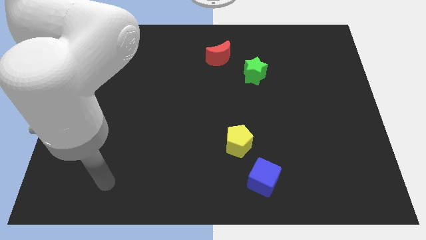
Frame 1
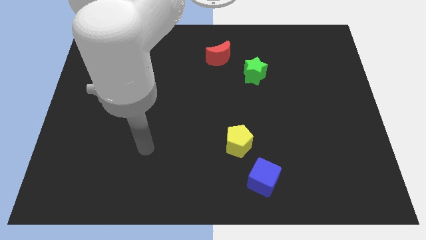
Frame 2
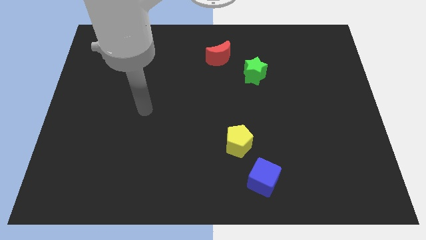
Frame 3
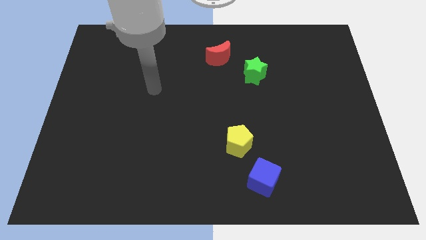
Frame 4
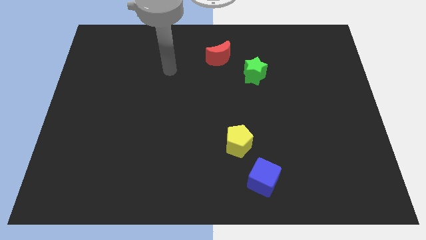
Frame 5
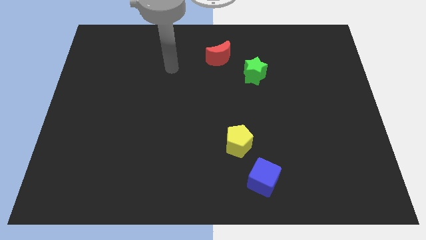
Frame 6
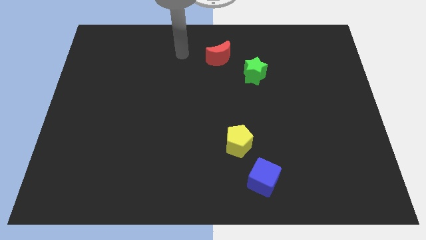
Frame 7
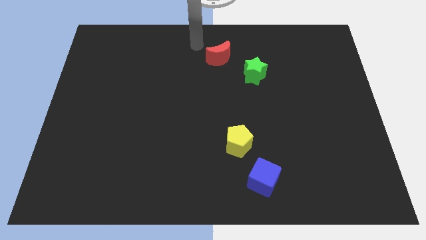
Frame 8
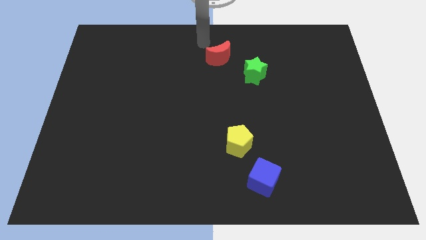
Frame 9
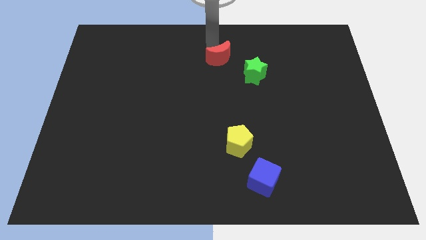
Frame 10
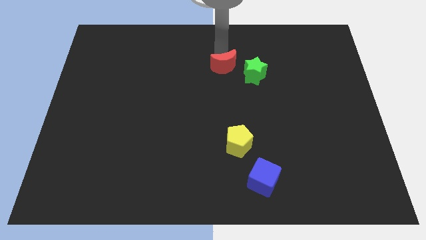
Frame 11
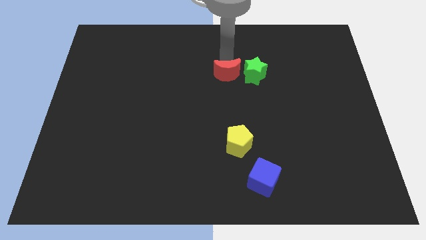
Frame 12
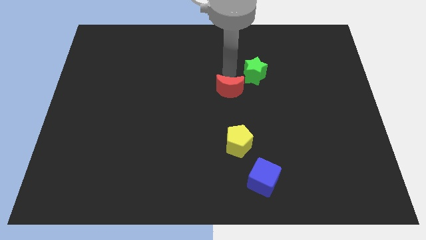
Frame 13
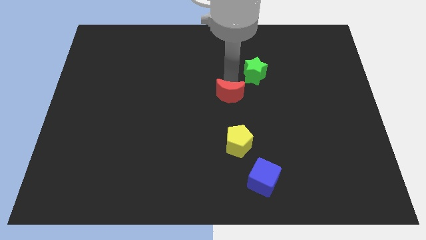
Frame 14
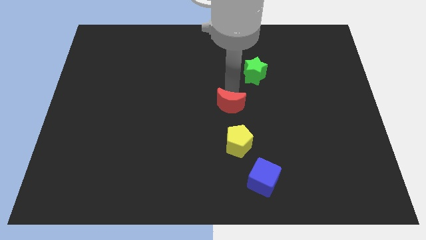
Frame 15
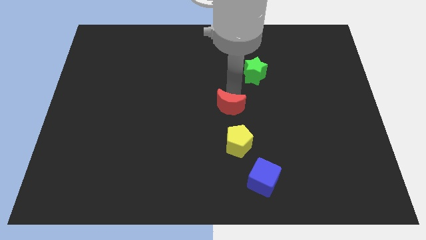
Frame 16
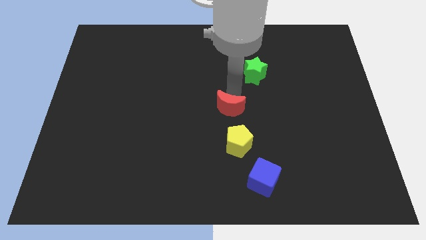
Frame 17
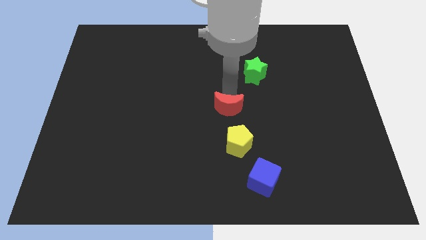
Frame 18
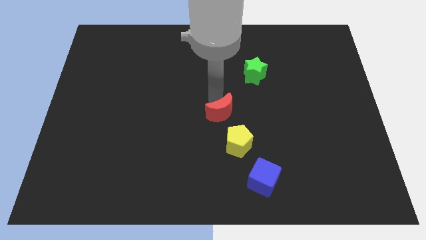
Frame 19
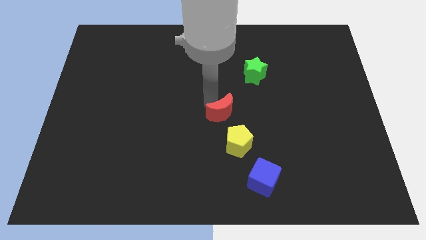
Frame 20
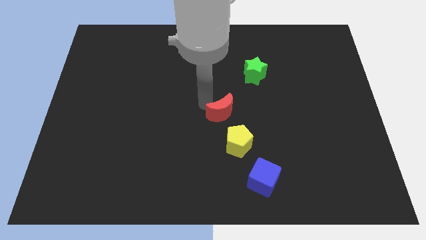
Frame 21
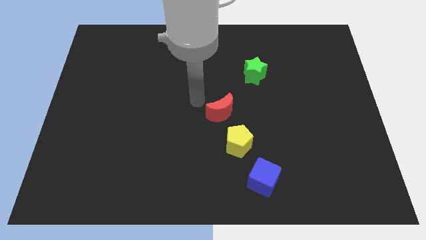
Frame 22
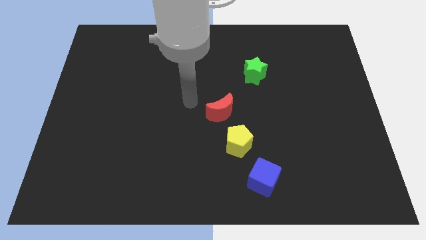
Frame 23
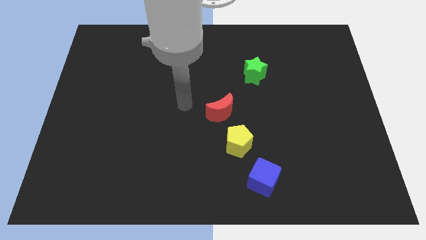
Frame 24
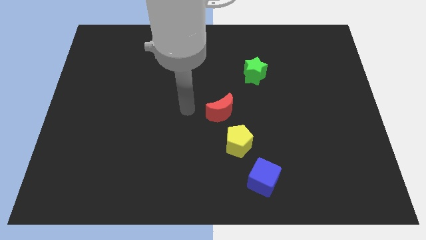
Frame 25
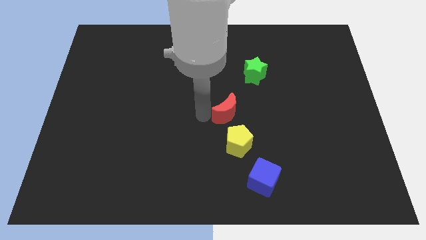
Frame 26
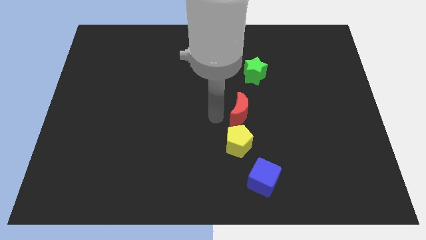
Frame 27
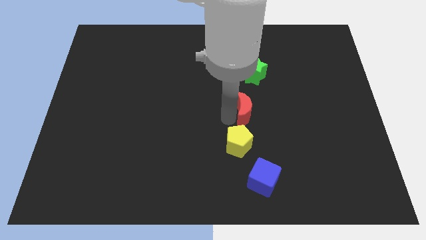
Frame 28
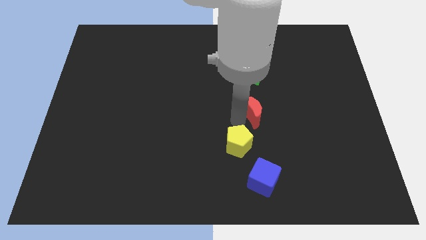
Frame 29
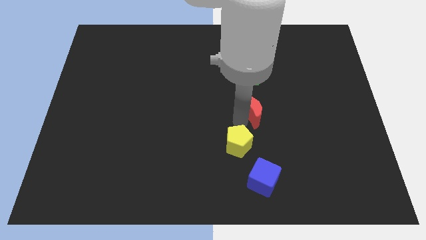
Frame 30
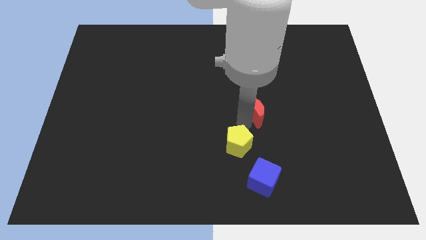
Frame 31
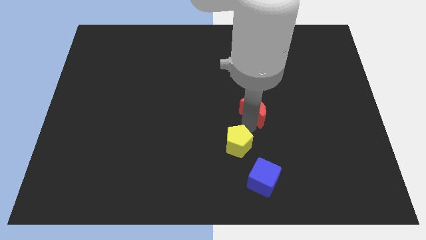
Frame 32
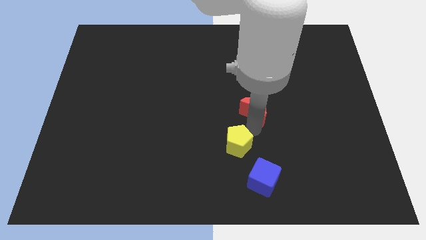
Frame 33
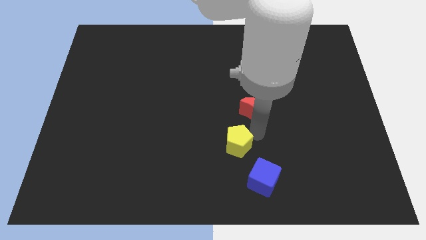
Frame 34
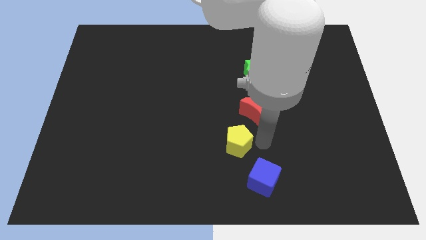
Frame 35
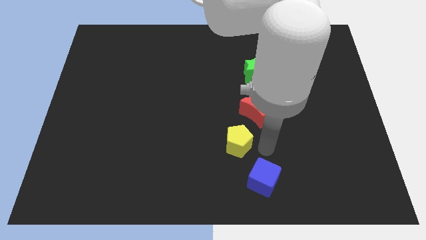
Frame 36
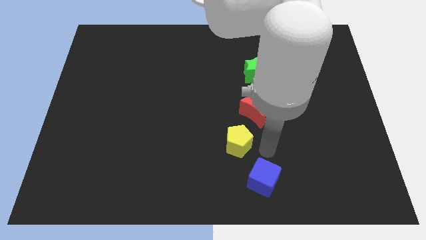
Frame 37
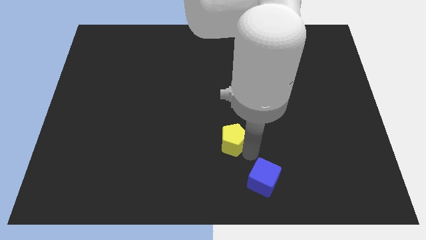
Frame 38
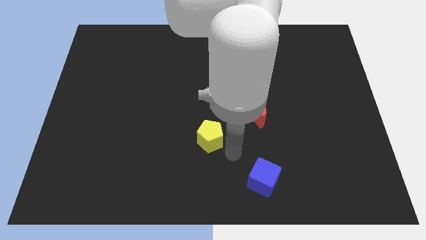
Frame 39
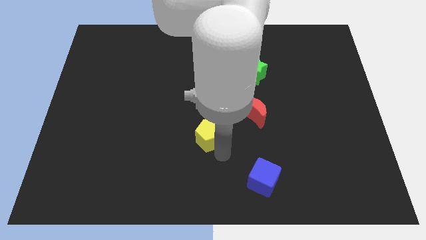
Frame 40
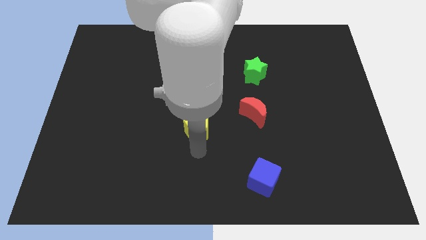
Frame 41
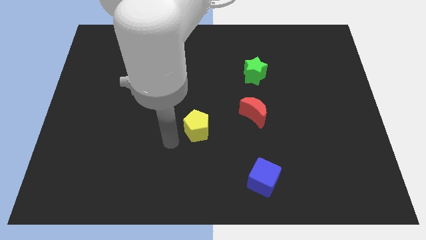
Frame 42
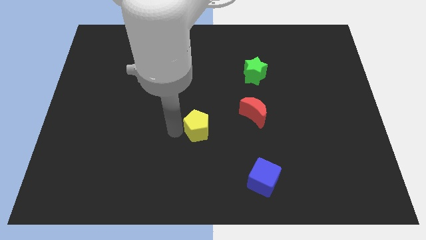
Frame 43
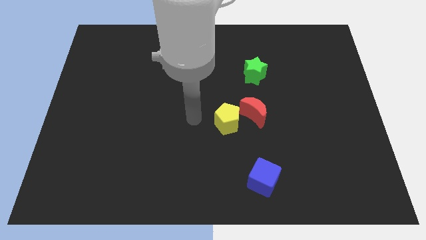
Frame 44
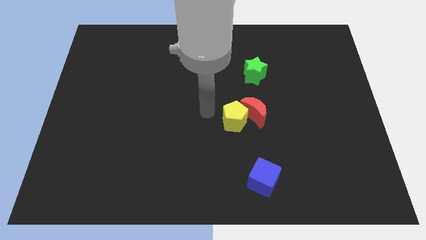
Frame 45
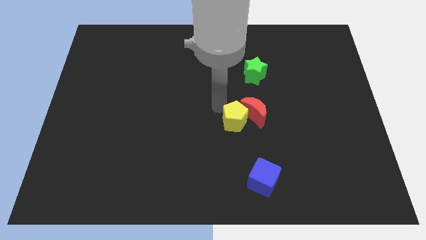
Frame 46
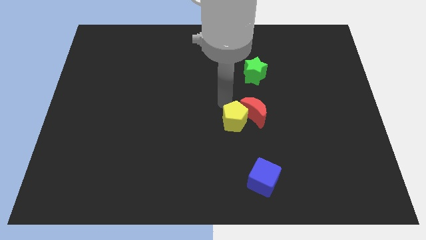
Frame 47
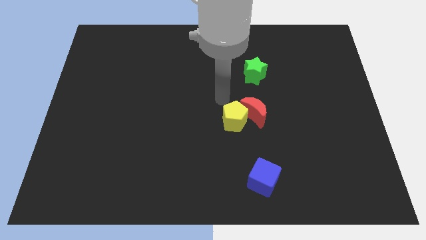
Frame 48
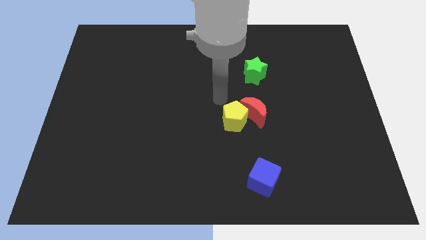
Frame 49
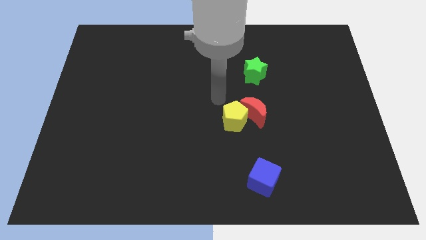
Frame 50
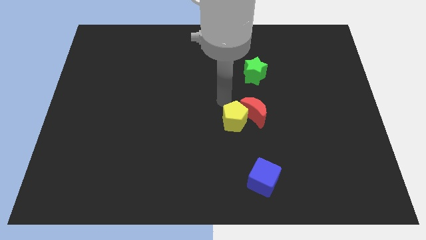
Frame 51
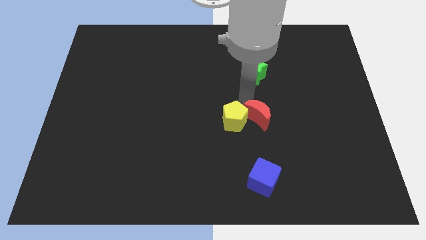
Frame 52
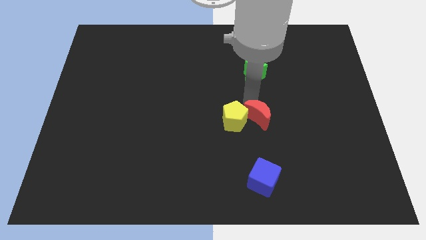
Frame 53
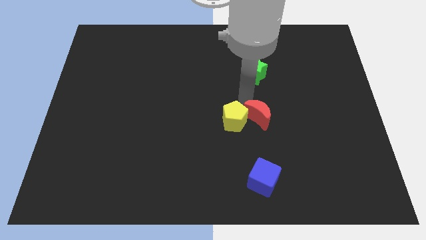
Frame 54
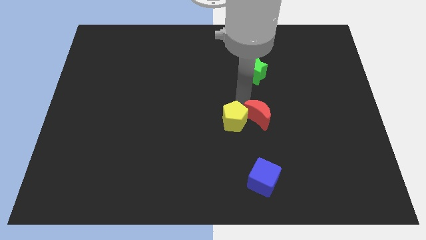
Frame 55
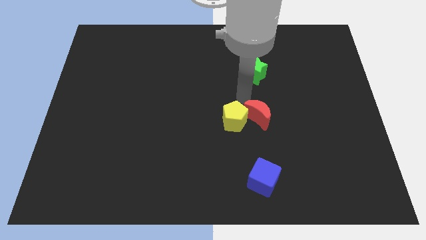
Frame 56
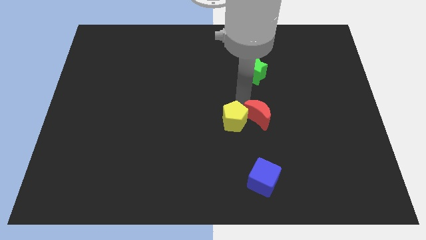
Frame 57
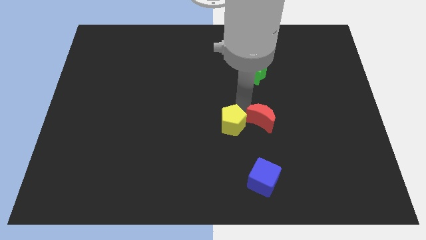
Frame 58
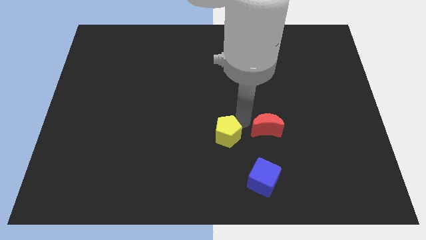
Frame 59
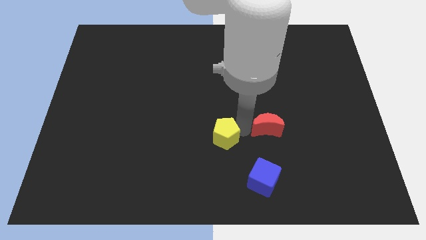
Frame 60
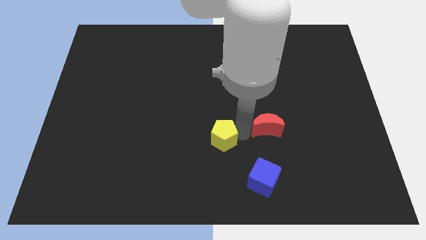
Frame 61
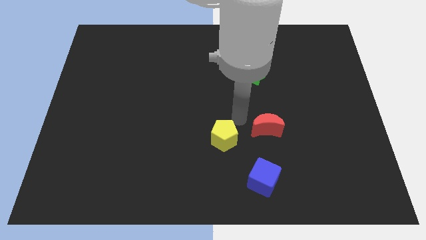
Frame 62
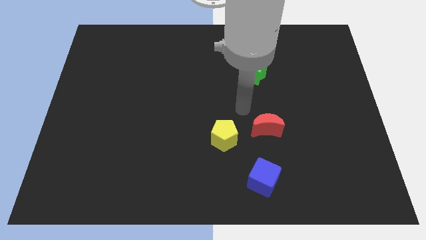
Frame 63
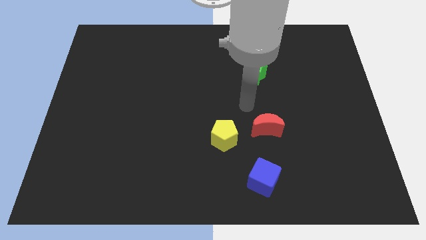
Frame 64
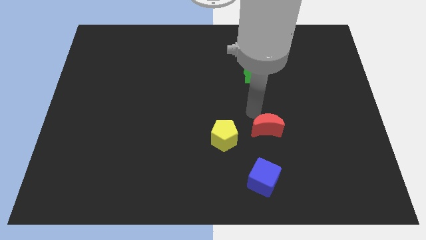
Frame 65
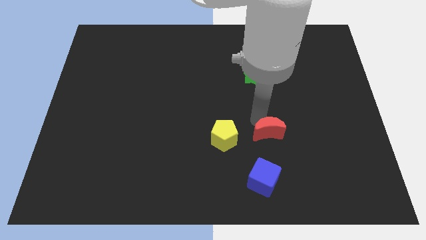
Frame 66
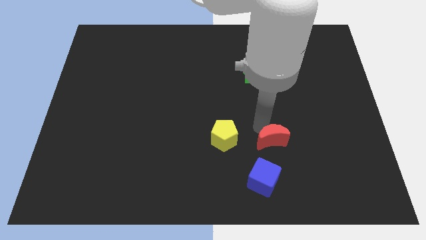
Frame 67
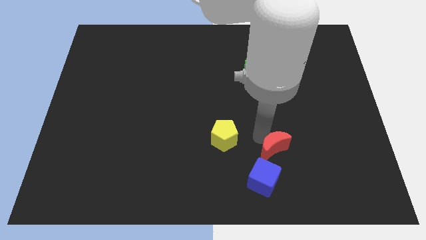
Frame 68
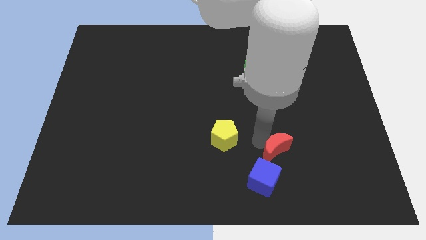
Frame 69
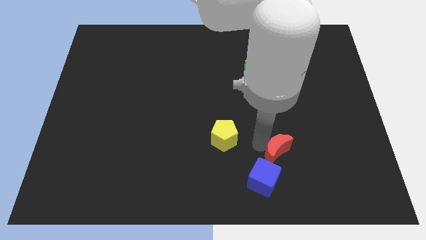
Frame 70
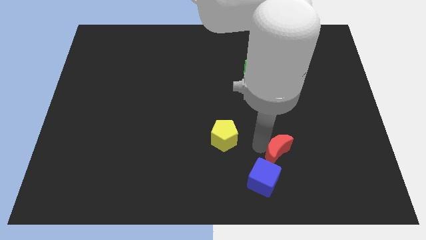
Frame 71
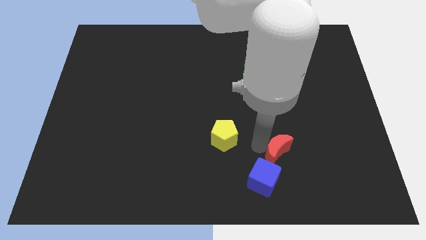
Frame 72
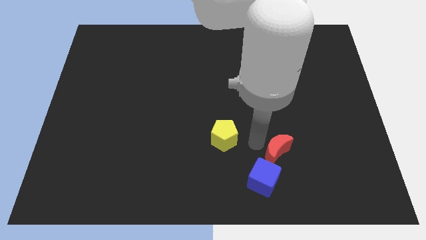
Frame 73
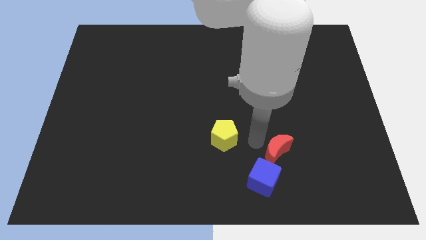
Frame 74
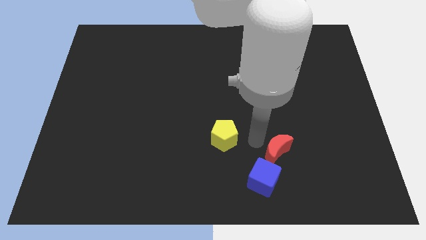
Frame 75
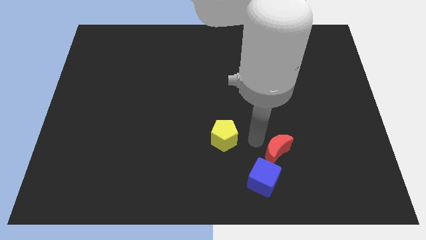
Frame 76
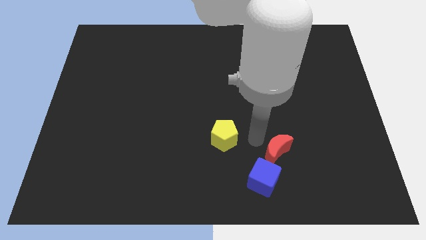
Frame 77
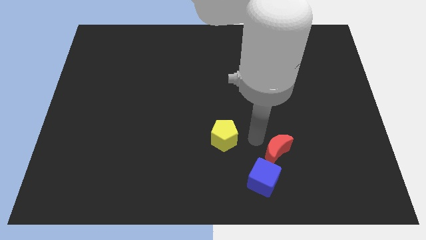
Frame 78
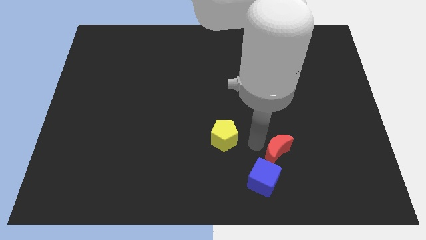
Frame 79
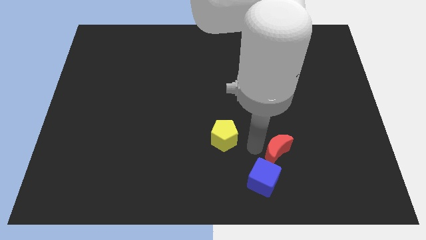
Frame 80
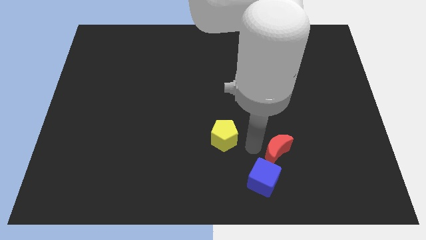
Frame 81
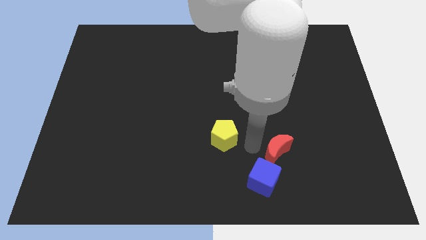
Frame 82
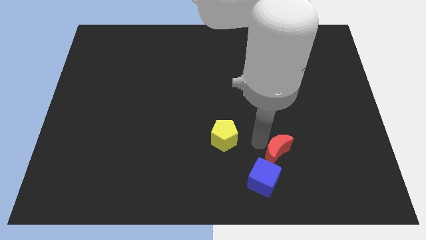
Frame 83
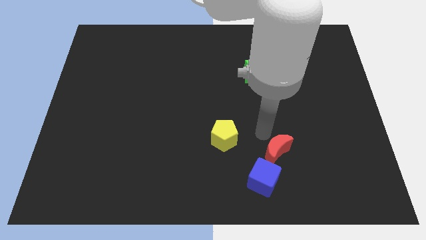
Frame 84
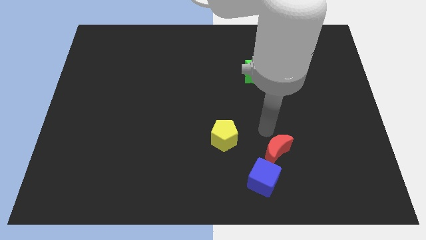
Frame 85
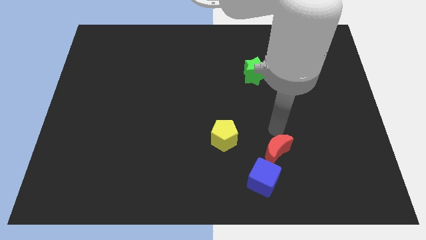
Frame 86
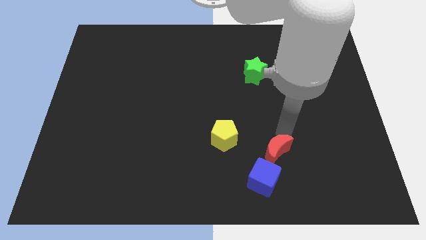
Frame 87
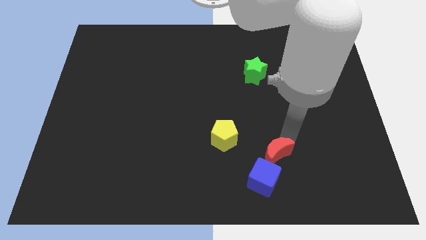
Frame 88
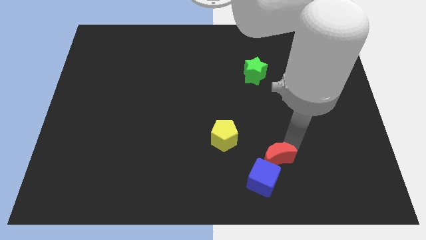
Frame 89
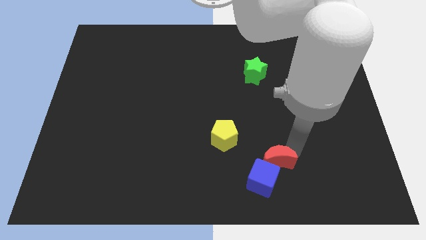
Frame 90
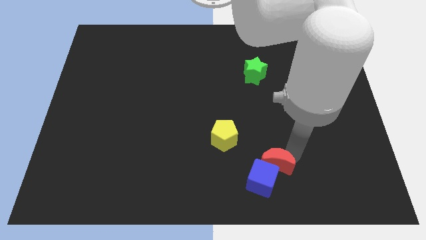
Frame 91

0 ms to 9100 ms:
push the moon towards the cube
